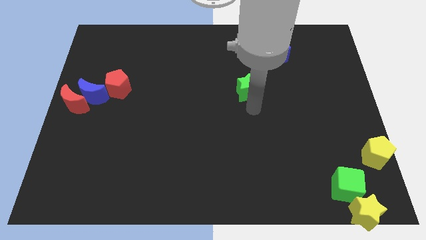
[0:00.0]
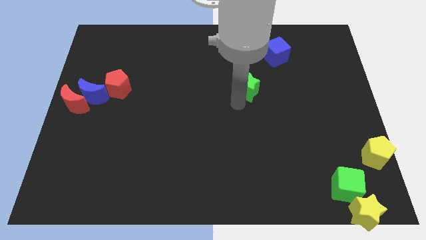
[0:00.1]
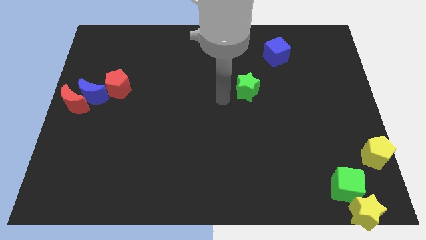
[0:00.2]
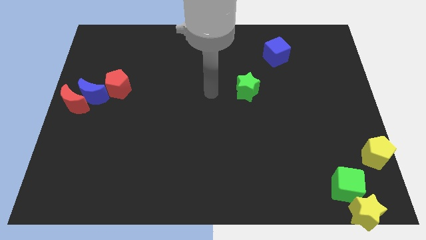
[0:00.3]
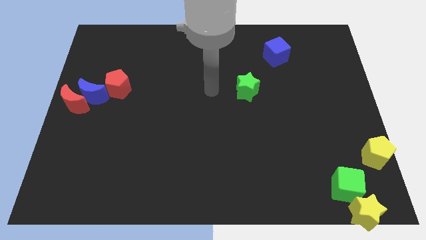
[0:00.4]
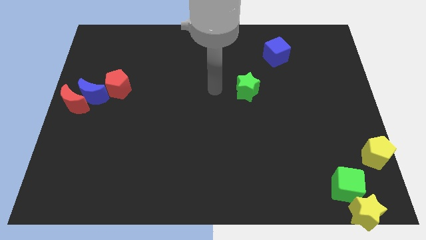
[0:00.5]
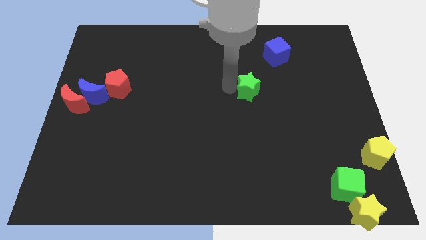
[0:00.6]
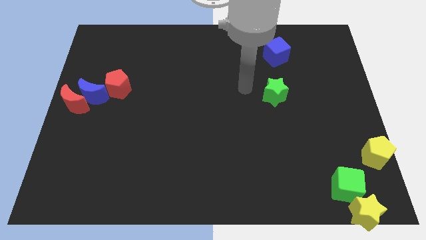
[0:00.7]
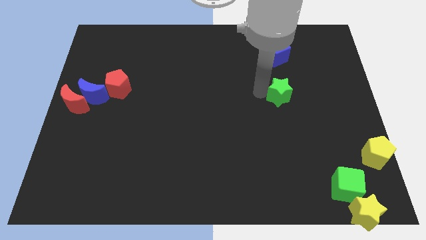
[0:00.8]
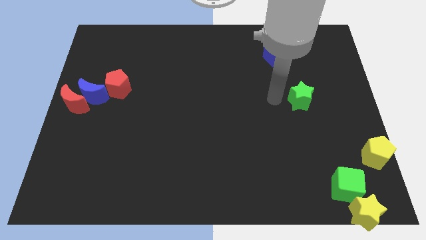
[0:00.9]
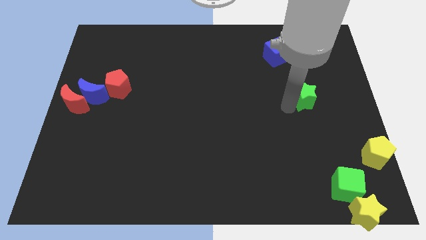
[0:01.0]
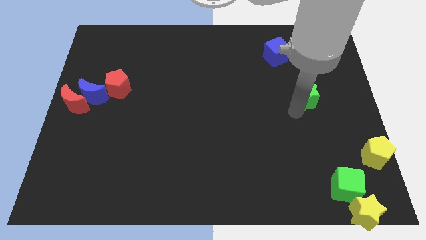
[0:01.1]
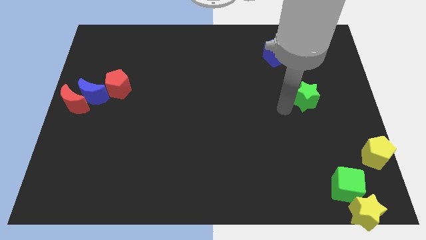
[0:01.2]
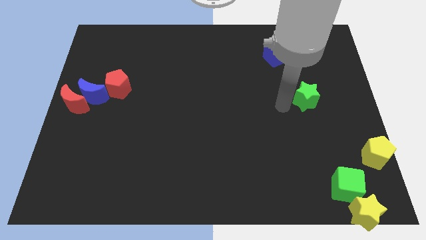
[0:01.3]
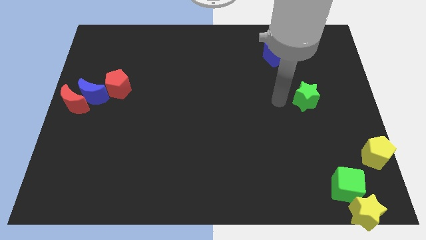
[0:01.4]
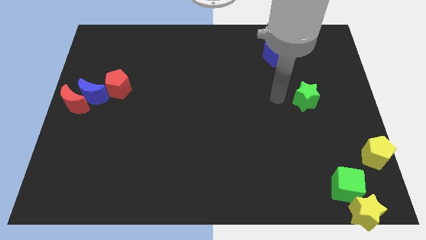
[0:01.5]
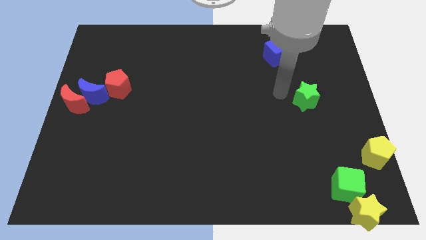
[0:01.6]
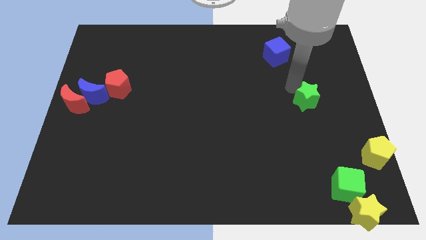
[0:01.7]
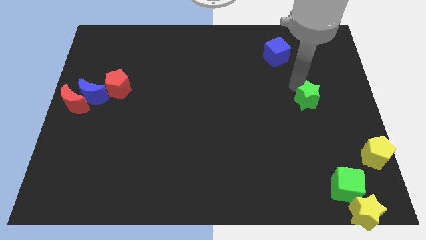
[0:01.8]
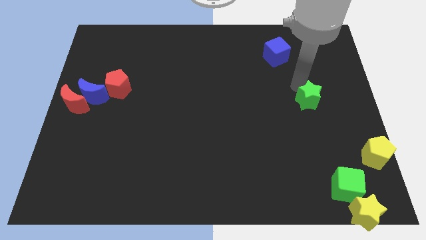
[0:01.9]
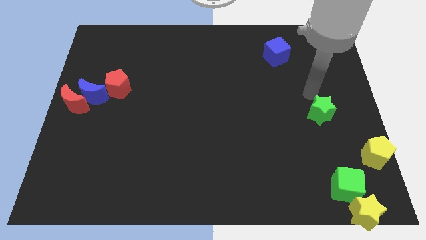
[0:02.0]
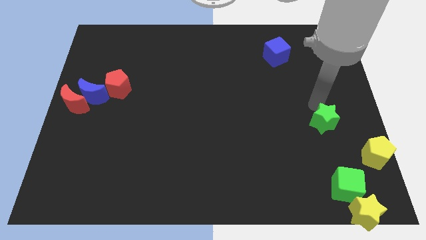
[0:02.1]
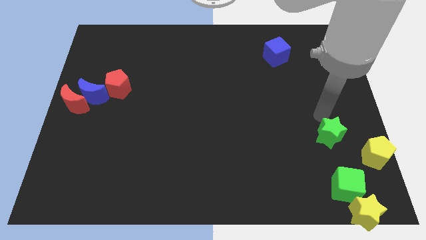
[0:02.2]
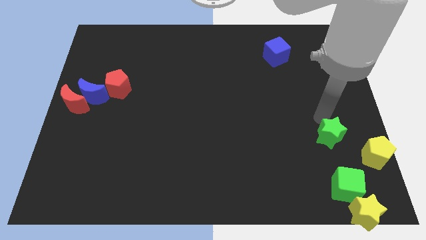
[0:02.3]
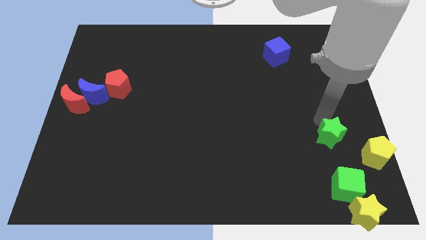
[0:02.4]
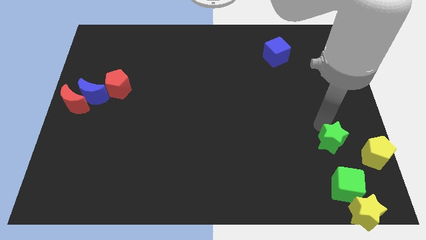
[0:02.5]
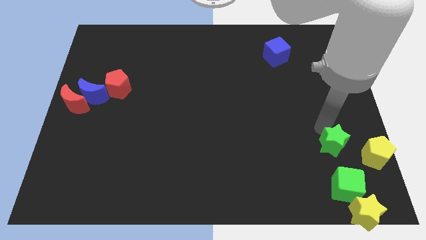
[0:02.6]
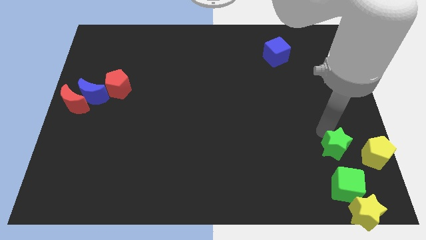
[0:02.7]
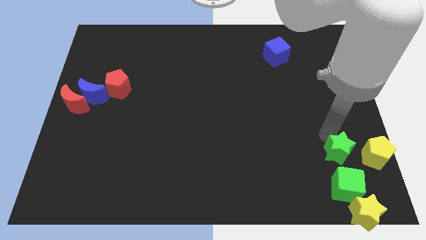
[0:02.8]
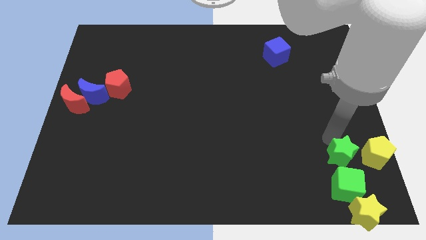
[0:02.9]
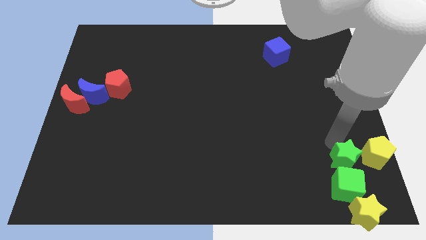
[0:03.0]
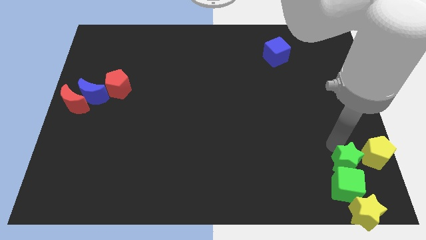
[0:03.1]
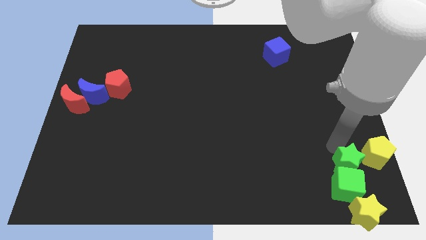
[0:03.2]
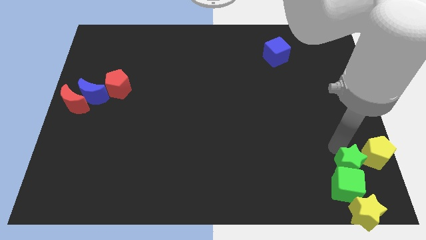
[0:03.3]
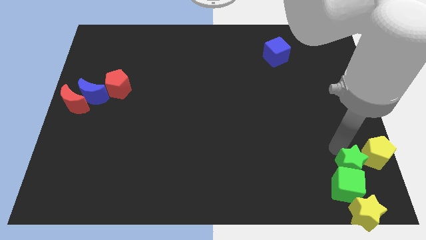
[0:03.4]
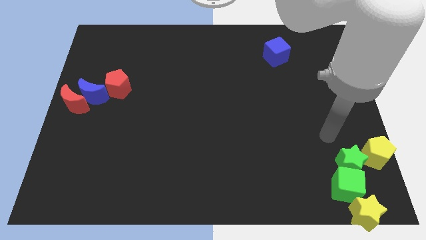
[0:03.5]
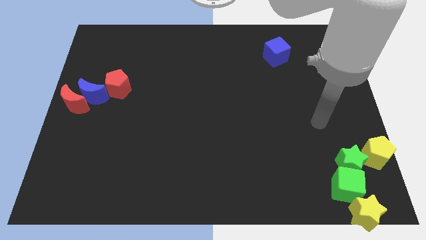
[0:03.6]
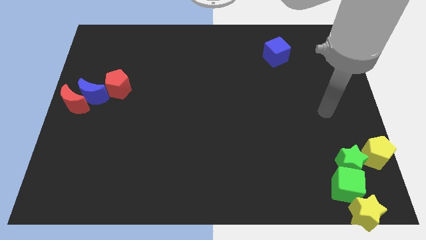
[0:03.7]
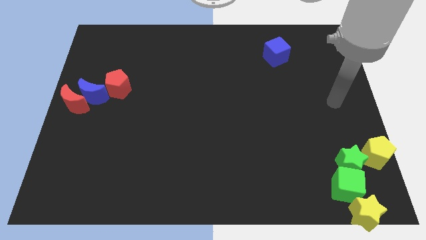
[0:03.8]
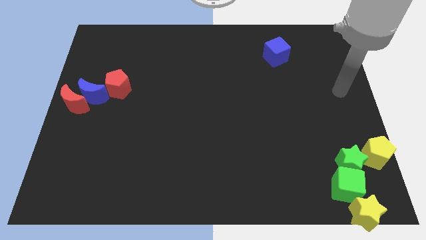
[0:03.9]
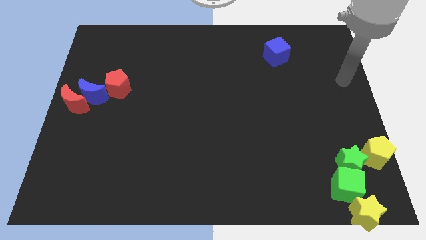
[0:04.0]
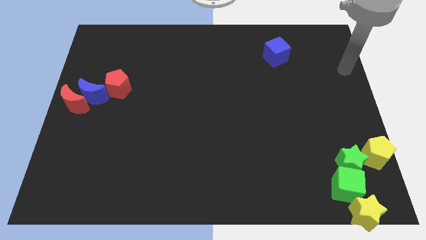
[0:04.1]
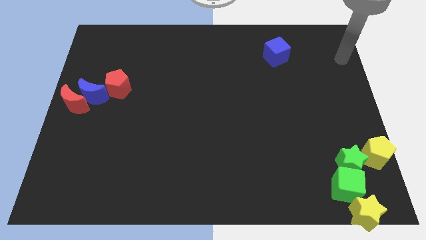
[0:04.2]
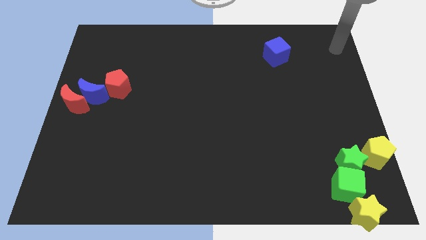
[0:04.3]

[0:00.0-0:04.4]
place the green star above the green cube

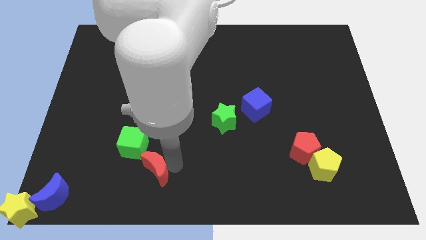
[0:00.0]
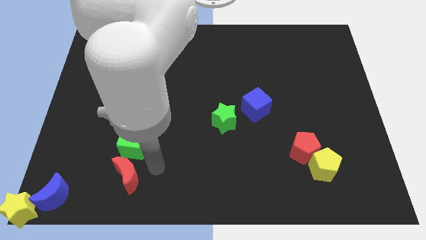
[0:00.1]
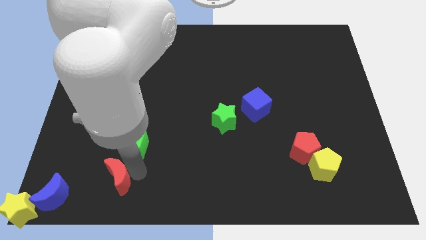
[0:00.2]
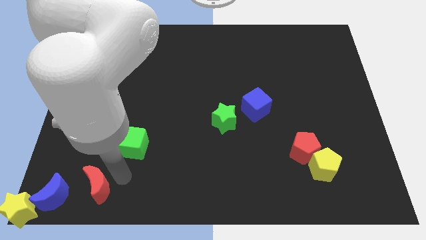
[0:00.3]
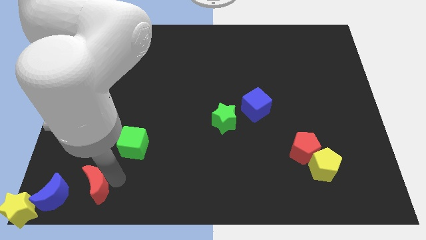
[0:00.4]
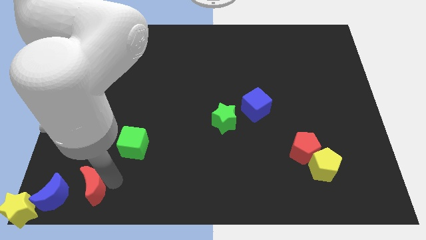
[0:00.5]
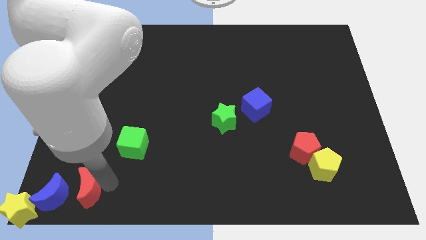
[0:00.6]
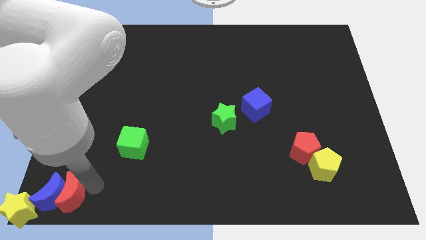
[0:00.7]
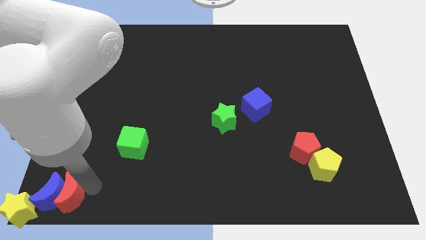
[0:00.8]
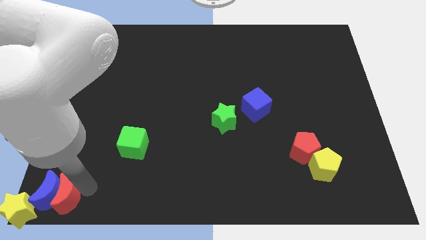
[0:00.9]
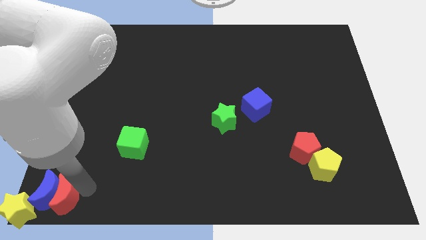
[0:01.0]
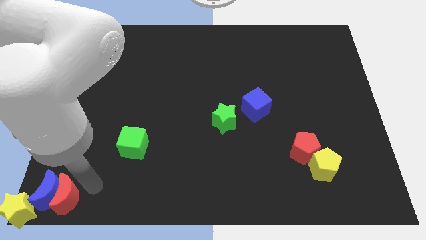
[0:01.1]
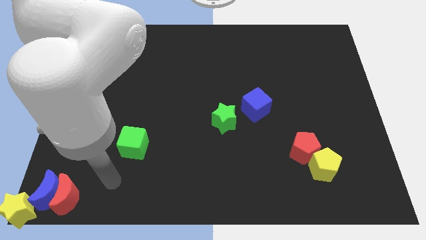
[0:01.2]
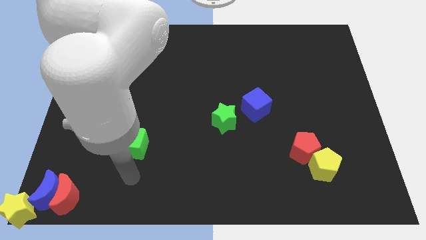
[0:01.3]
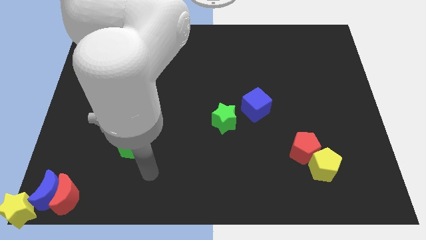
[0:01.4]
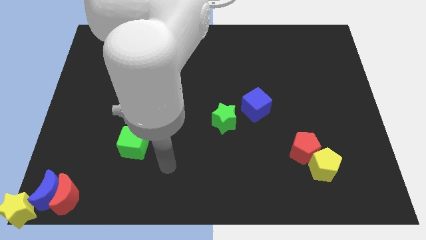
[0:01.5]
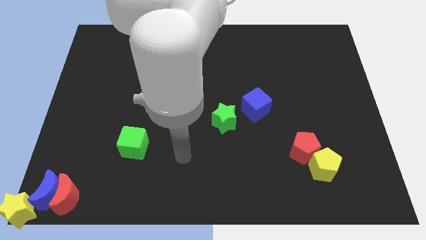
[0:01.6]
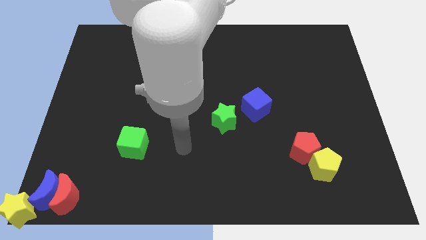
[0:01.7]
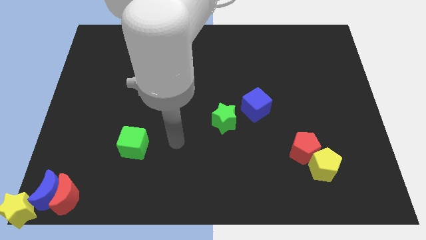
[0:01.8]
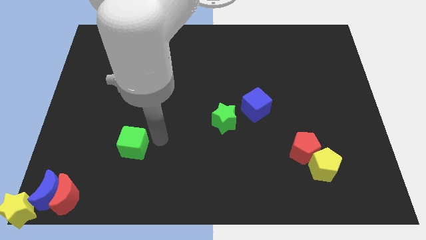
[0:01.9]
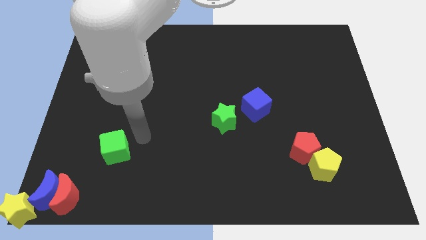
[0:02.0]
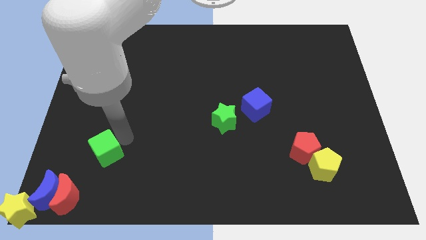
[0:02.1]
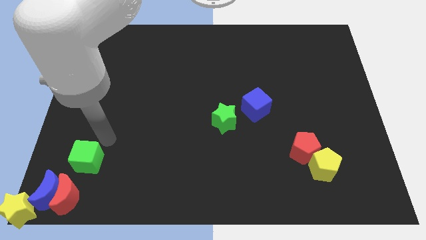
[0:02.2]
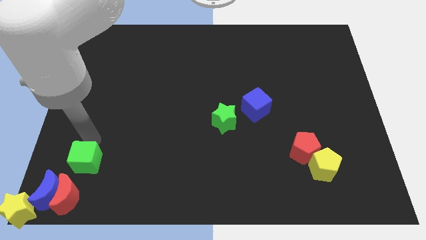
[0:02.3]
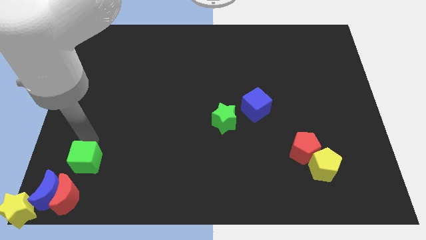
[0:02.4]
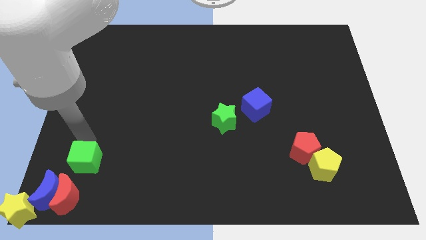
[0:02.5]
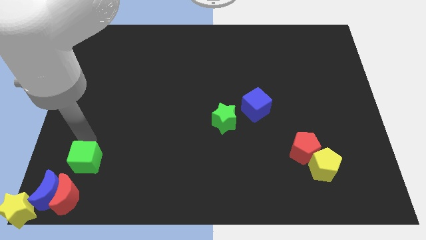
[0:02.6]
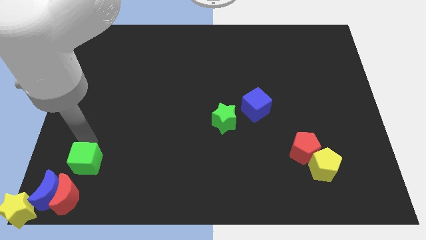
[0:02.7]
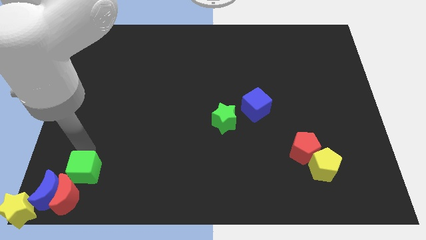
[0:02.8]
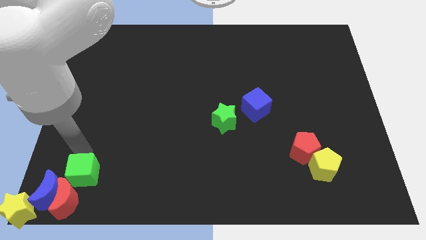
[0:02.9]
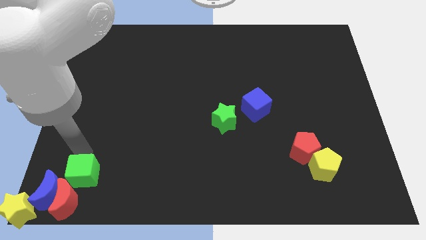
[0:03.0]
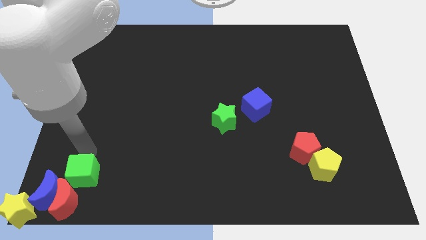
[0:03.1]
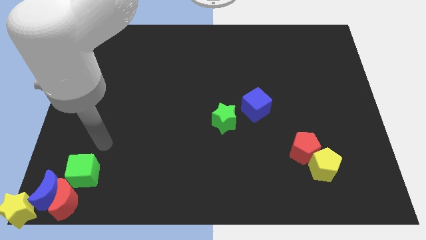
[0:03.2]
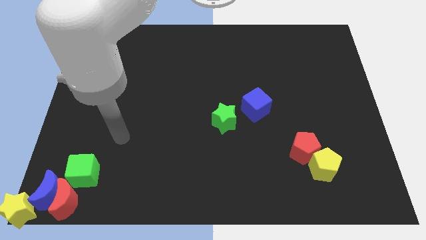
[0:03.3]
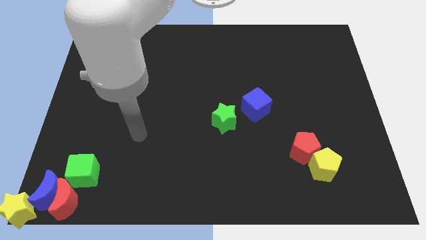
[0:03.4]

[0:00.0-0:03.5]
move the red moon and green cube into the blue crescent

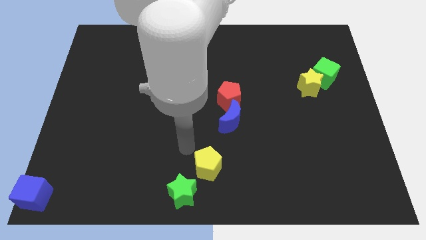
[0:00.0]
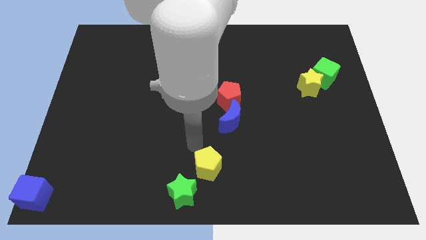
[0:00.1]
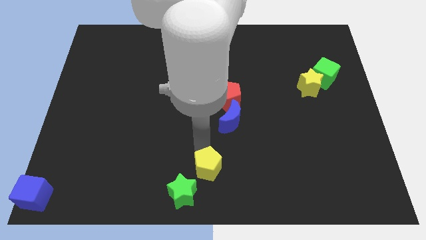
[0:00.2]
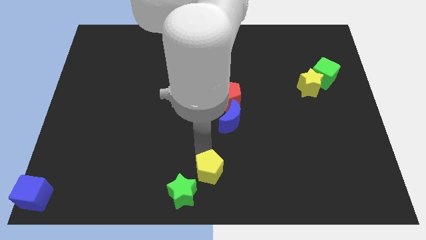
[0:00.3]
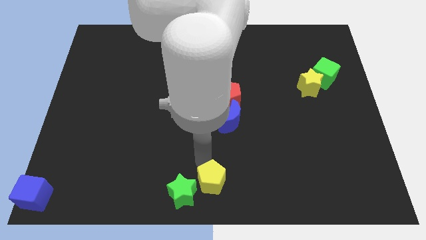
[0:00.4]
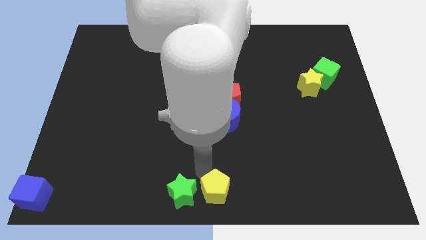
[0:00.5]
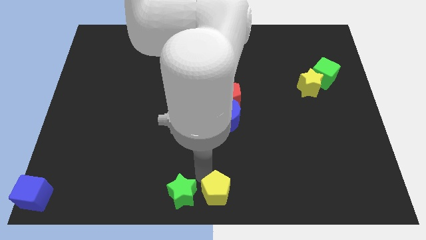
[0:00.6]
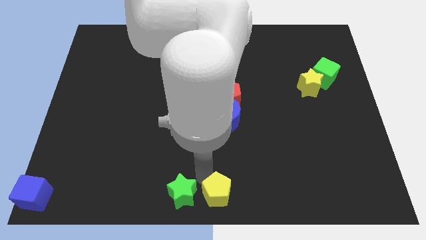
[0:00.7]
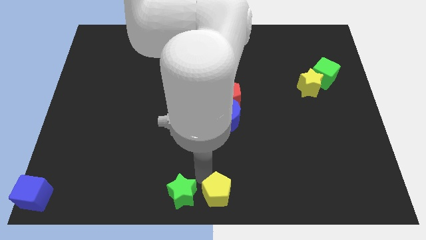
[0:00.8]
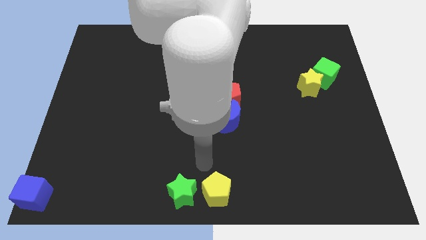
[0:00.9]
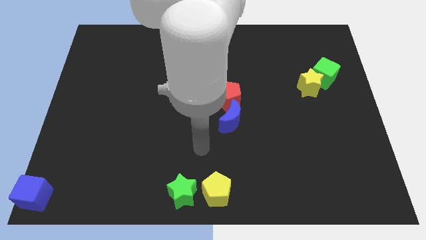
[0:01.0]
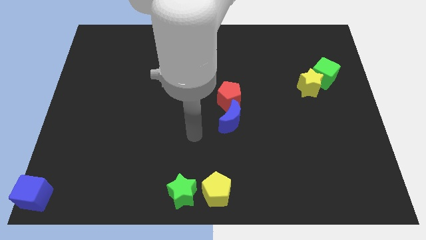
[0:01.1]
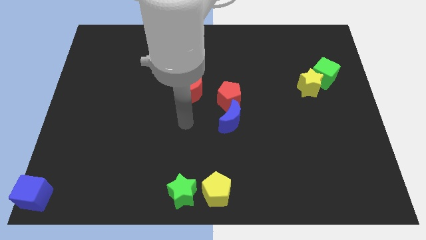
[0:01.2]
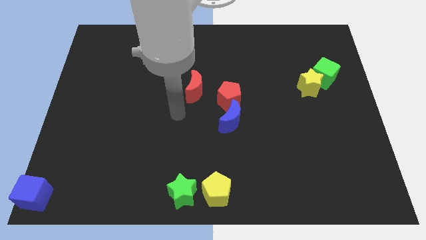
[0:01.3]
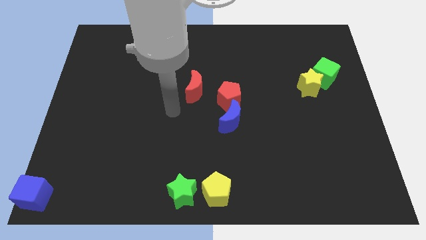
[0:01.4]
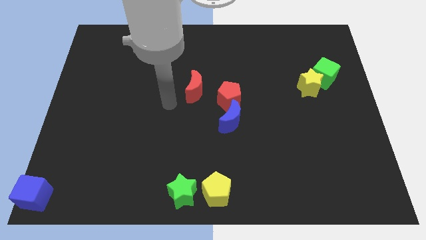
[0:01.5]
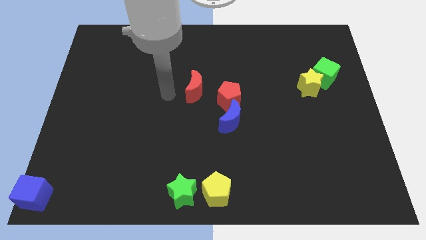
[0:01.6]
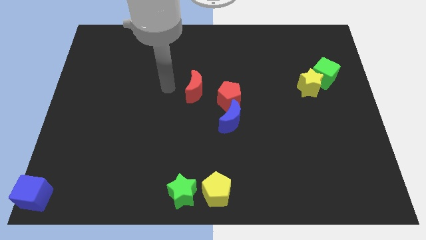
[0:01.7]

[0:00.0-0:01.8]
move the yellow pentagon right to the green star
